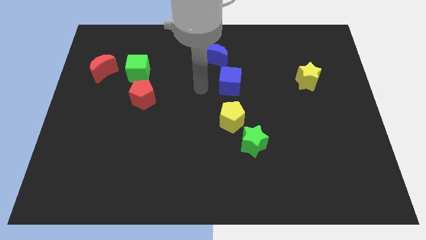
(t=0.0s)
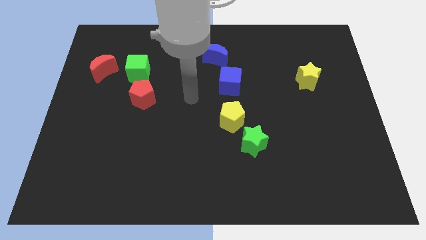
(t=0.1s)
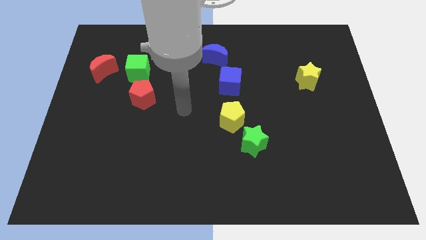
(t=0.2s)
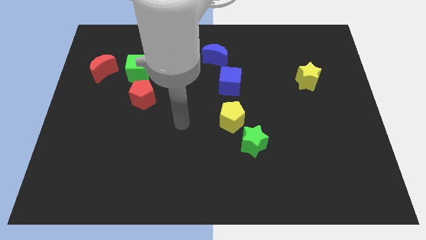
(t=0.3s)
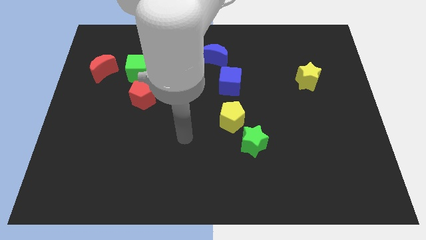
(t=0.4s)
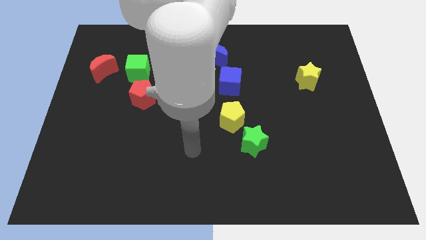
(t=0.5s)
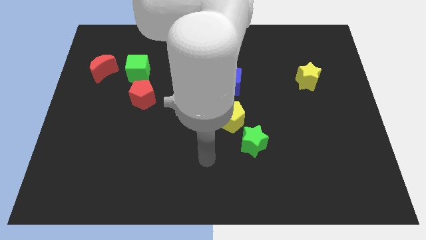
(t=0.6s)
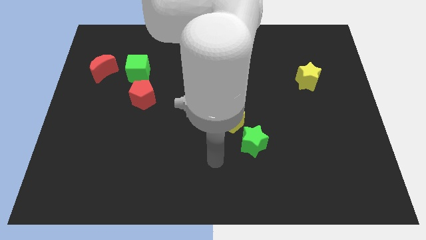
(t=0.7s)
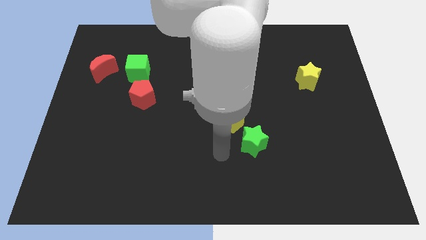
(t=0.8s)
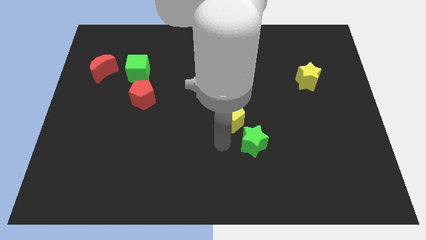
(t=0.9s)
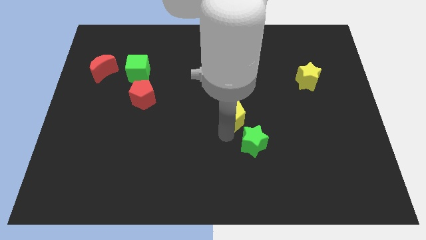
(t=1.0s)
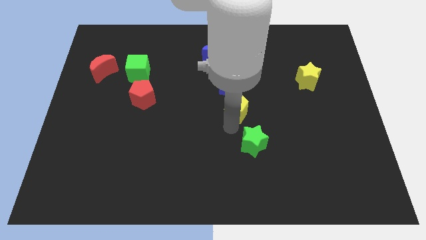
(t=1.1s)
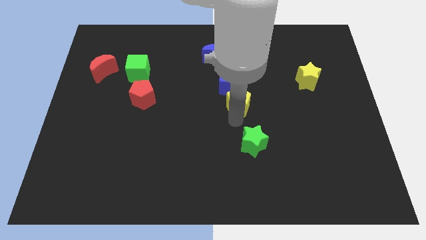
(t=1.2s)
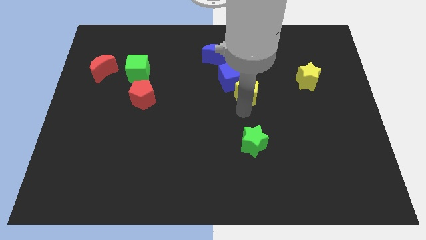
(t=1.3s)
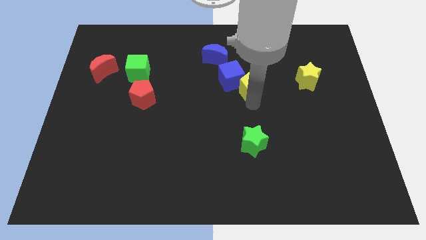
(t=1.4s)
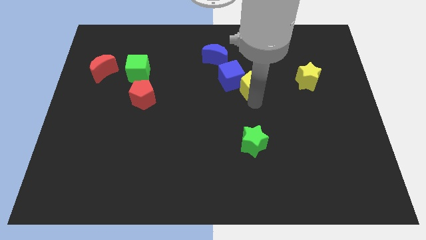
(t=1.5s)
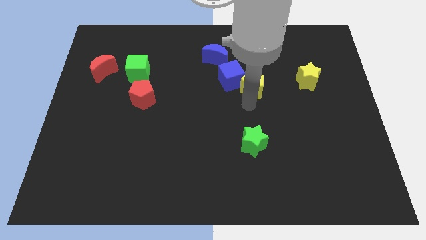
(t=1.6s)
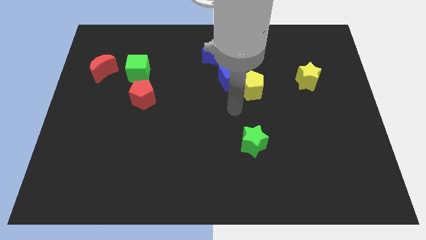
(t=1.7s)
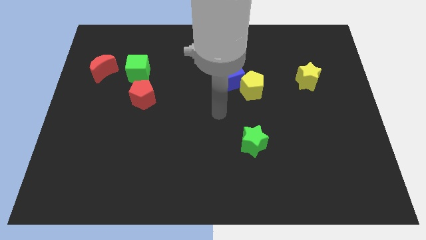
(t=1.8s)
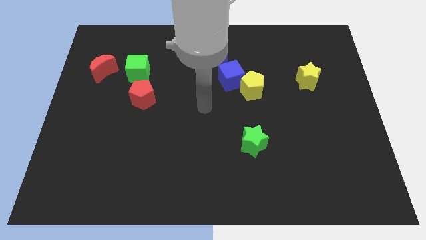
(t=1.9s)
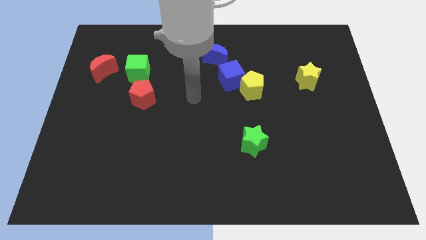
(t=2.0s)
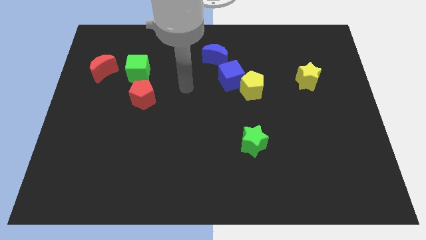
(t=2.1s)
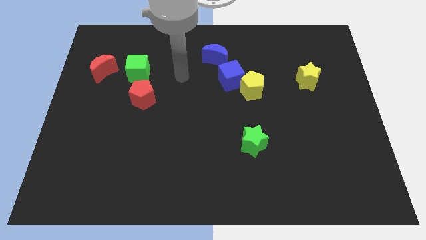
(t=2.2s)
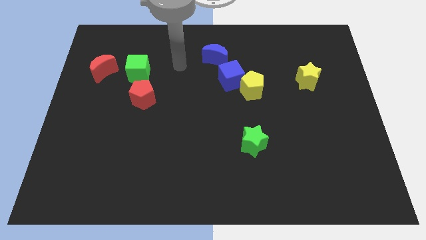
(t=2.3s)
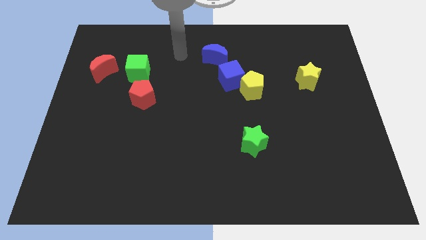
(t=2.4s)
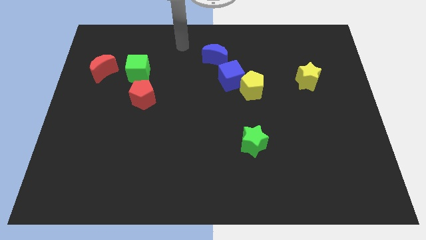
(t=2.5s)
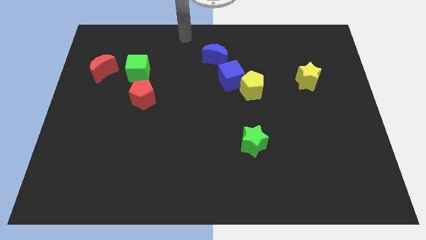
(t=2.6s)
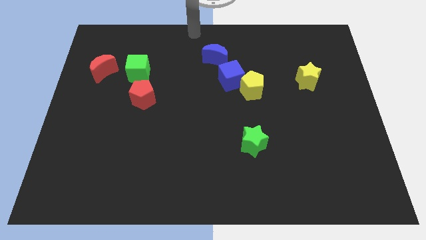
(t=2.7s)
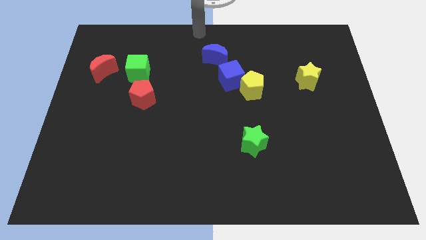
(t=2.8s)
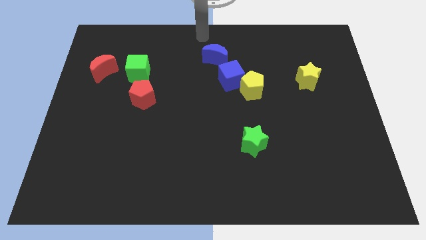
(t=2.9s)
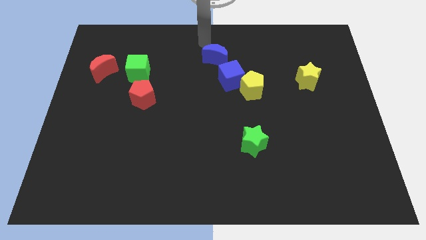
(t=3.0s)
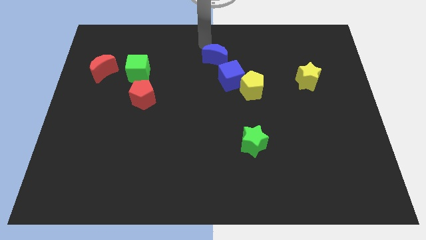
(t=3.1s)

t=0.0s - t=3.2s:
move the yellow pentagon below the blue cube

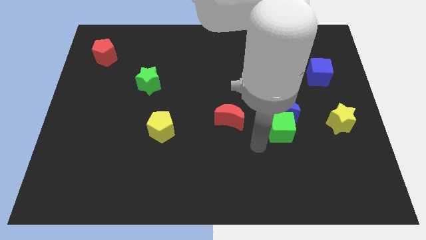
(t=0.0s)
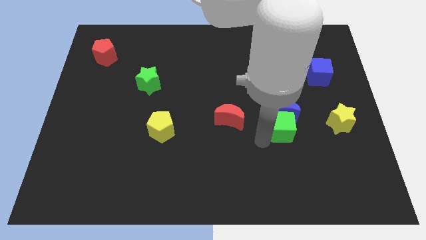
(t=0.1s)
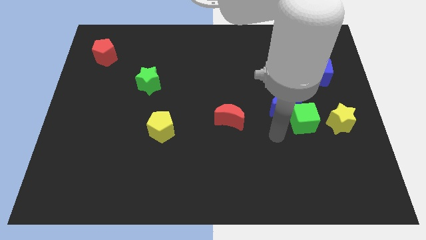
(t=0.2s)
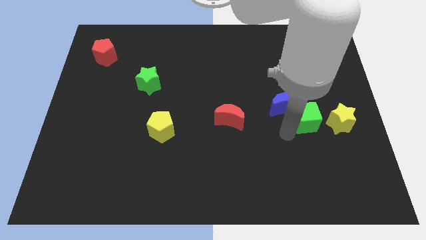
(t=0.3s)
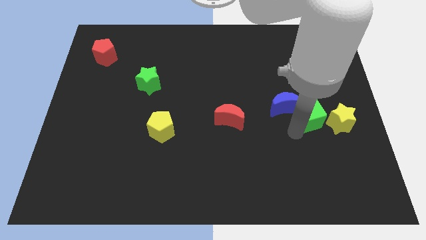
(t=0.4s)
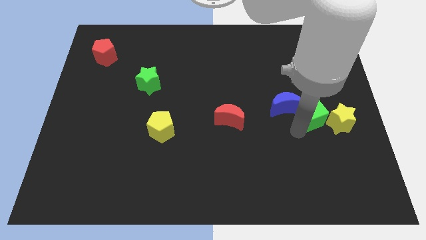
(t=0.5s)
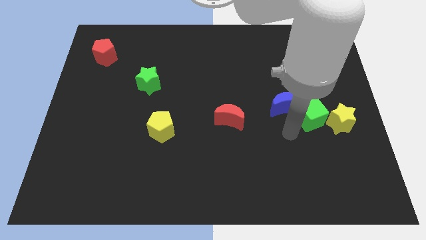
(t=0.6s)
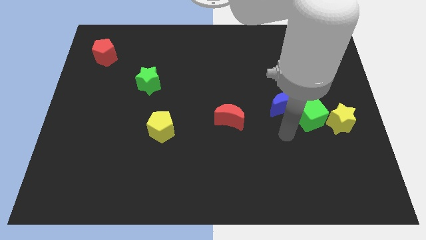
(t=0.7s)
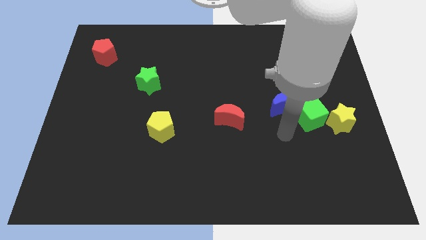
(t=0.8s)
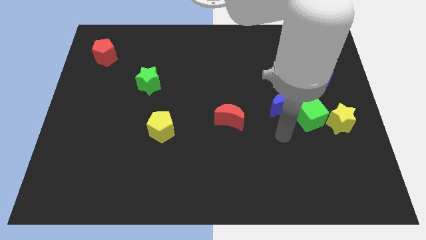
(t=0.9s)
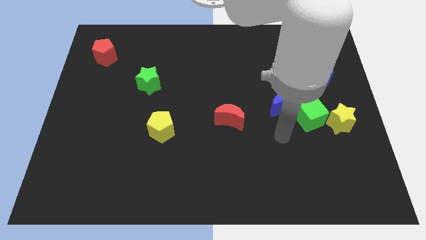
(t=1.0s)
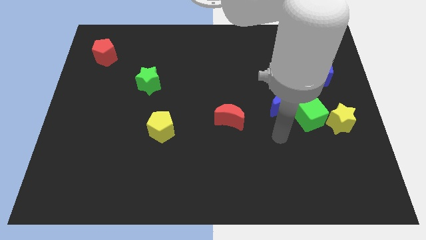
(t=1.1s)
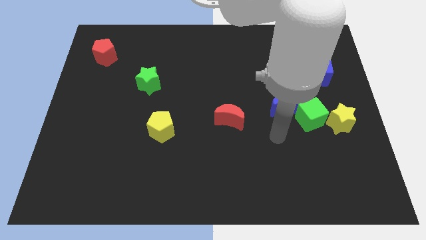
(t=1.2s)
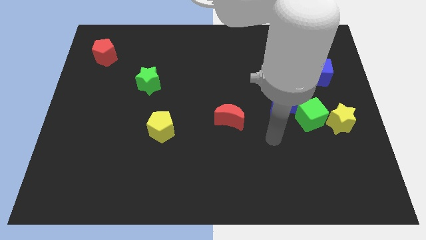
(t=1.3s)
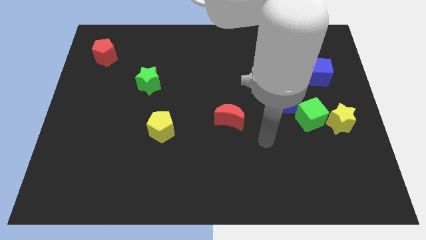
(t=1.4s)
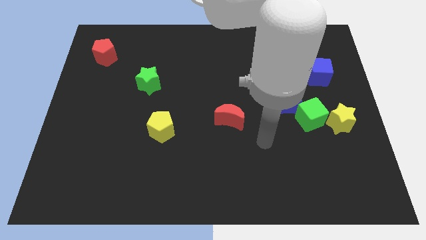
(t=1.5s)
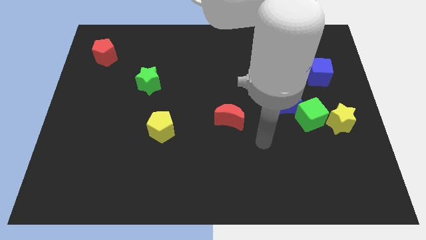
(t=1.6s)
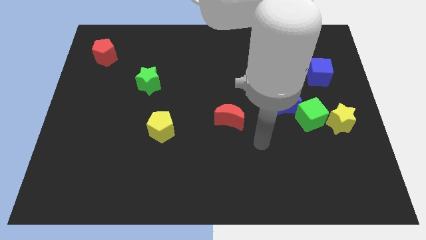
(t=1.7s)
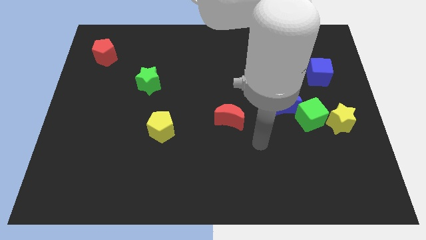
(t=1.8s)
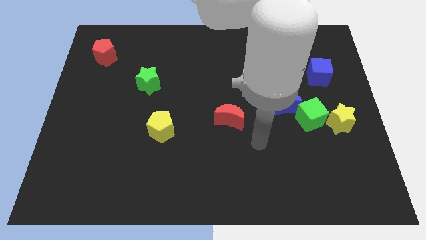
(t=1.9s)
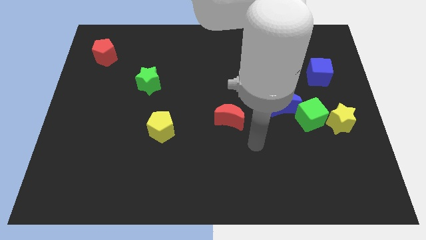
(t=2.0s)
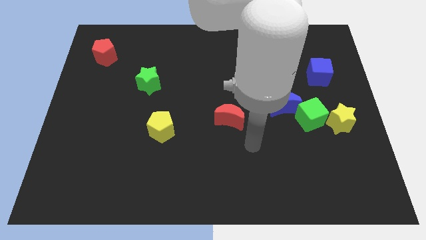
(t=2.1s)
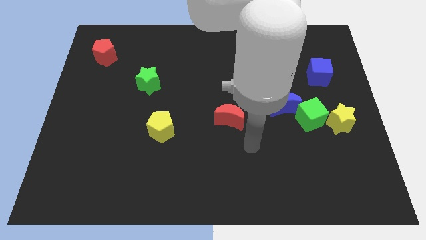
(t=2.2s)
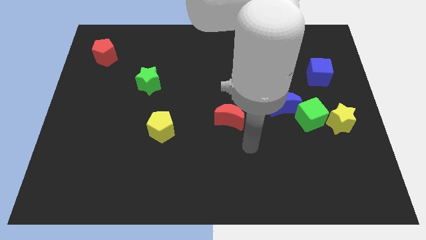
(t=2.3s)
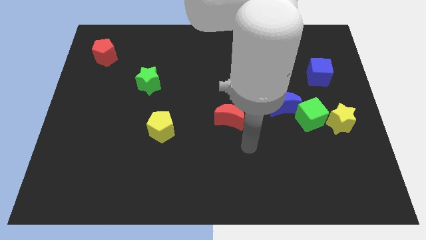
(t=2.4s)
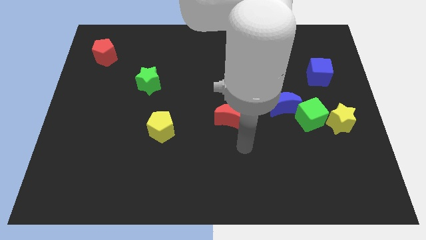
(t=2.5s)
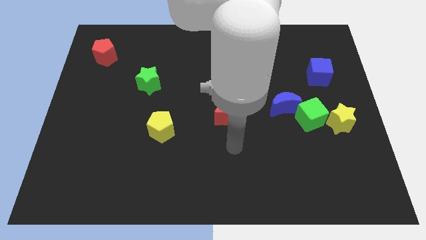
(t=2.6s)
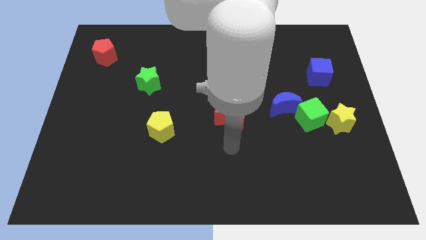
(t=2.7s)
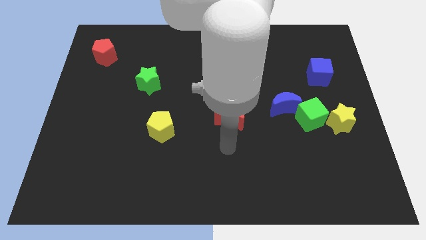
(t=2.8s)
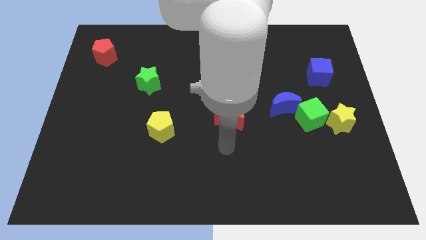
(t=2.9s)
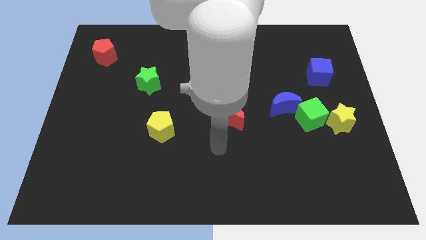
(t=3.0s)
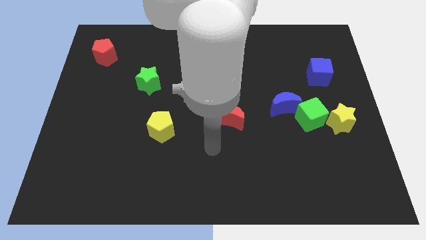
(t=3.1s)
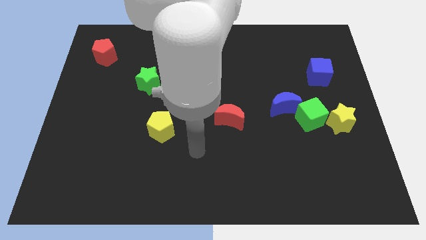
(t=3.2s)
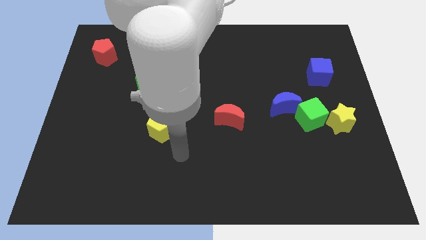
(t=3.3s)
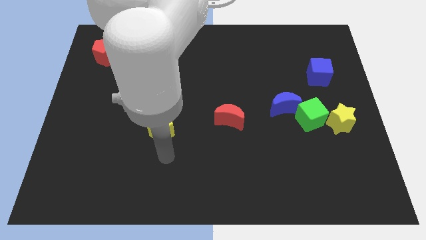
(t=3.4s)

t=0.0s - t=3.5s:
push the green cube close to the left side of the yellow star

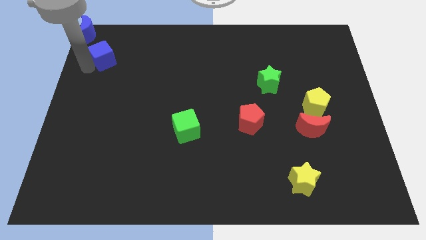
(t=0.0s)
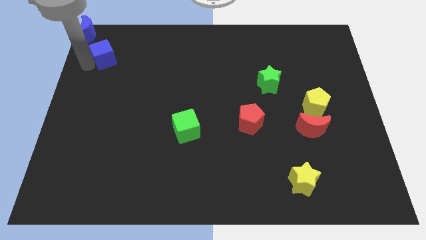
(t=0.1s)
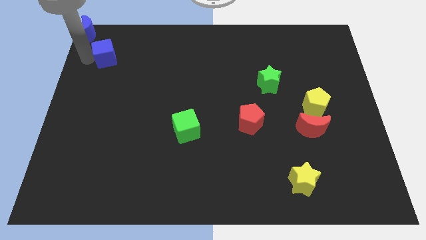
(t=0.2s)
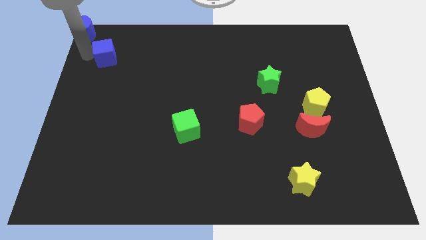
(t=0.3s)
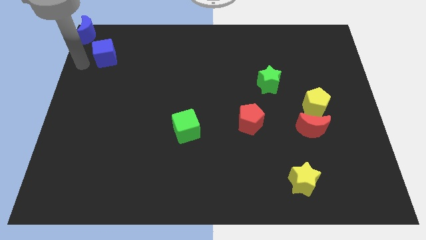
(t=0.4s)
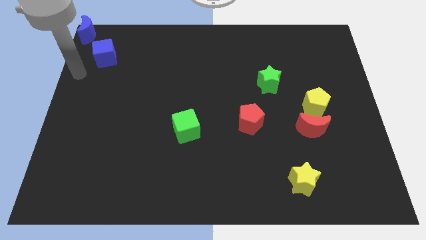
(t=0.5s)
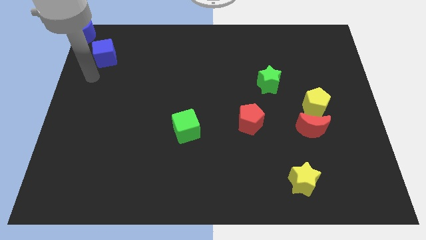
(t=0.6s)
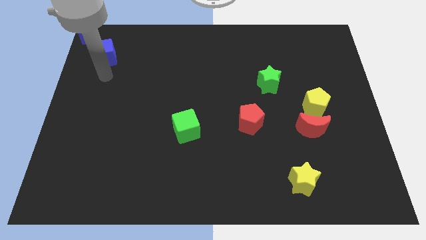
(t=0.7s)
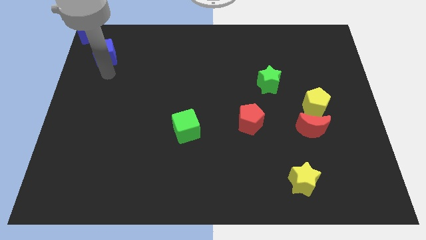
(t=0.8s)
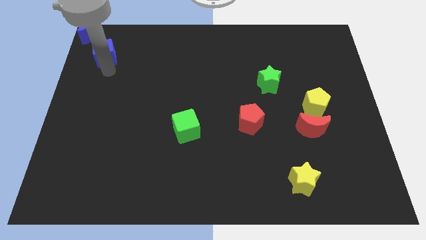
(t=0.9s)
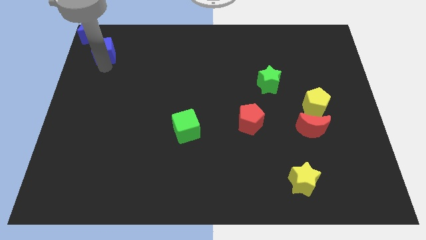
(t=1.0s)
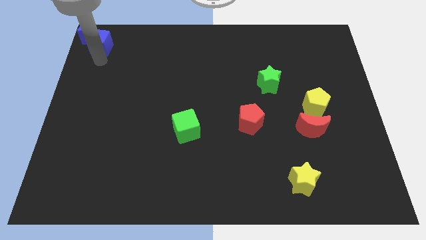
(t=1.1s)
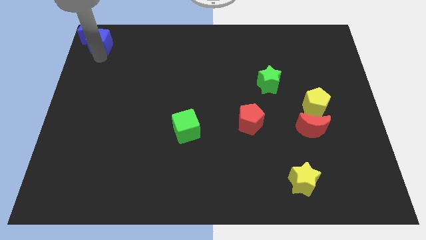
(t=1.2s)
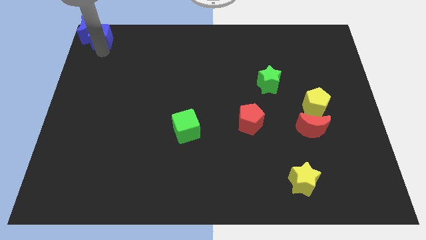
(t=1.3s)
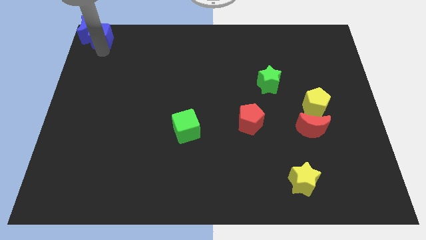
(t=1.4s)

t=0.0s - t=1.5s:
move the blue cube to the bottom right side of the blue moon

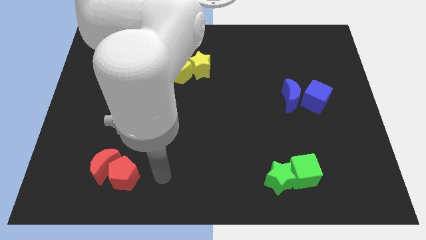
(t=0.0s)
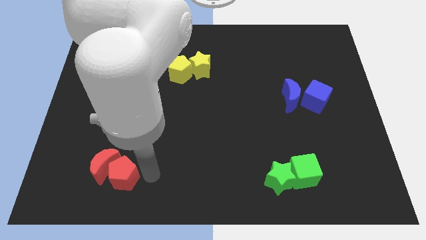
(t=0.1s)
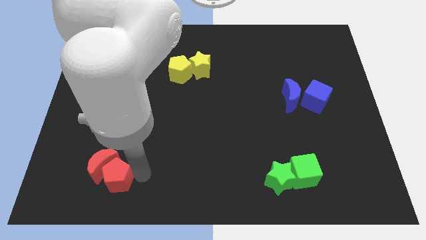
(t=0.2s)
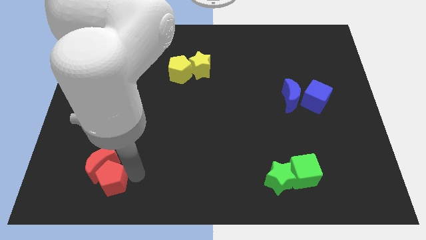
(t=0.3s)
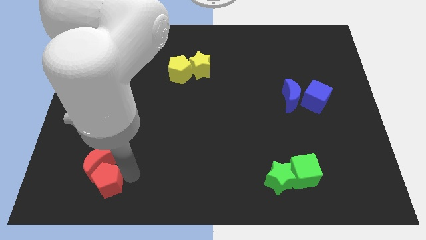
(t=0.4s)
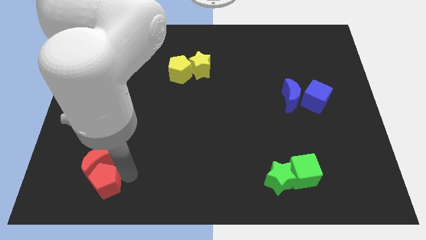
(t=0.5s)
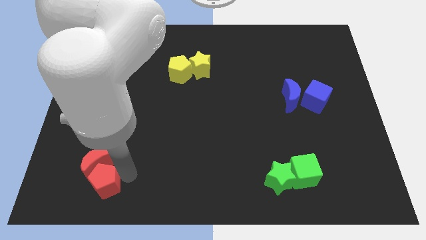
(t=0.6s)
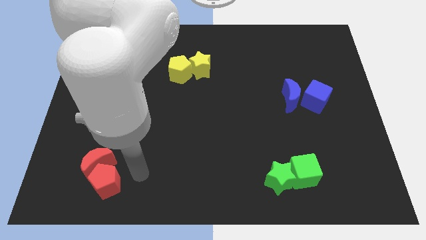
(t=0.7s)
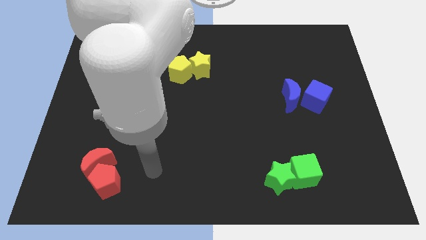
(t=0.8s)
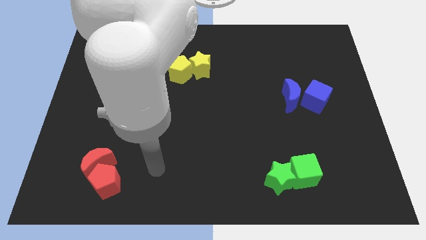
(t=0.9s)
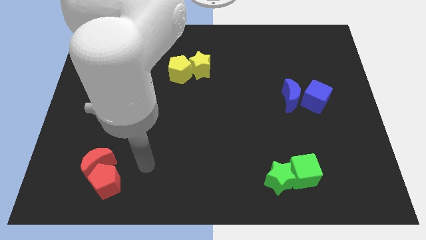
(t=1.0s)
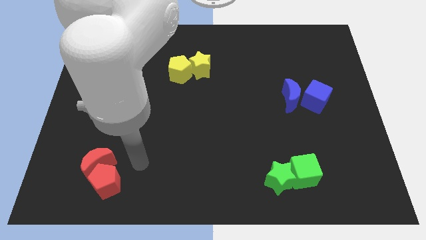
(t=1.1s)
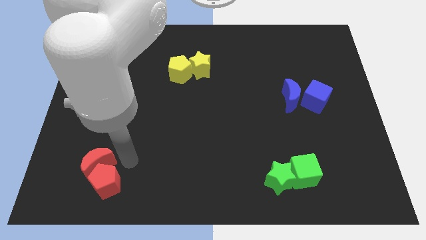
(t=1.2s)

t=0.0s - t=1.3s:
place the red pentagon above the red crescent
